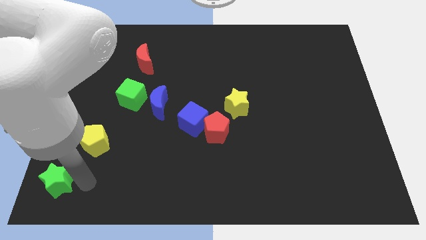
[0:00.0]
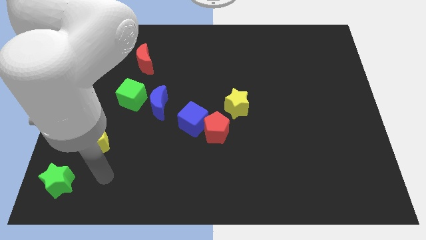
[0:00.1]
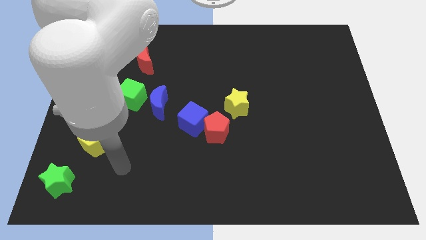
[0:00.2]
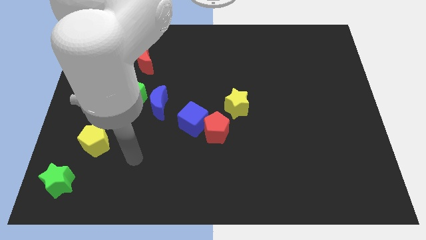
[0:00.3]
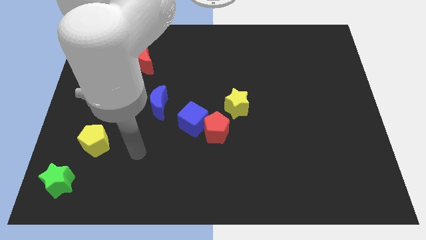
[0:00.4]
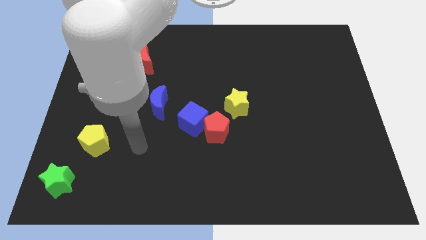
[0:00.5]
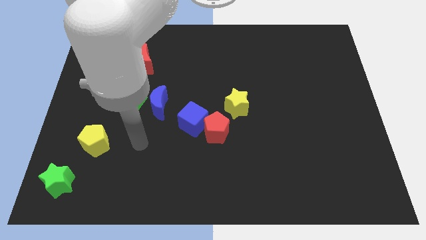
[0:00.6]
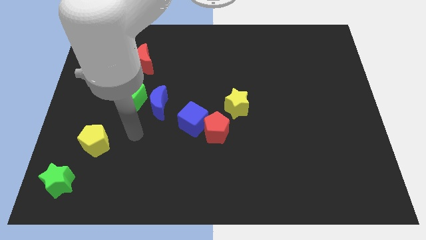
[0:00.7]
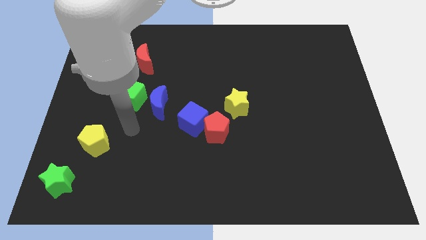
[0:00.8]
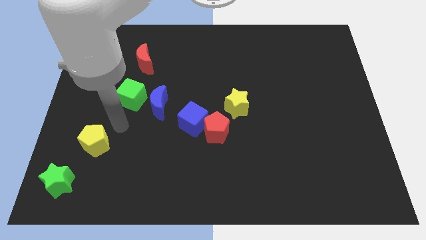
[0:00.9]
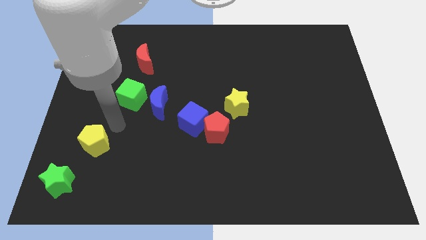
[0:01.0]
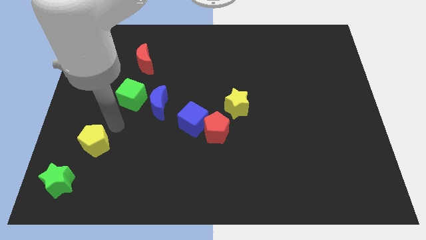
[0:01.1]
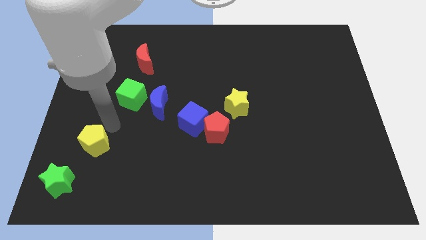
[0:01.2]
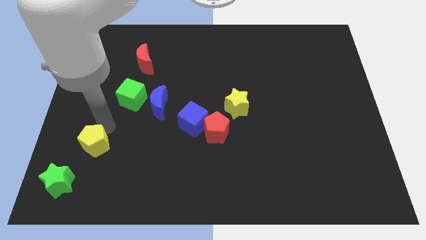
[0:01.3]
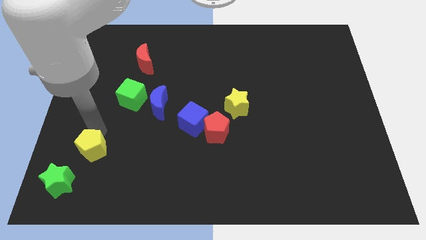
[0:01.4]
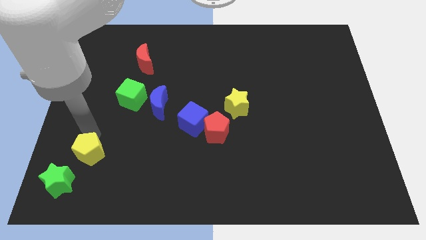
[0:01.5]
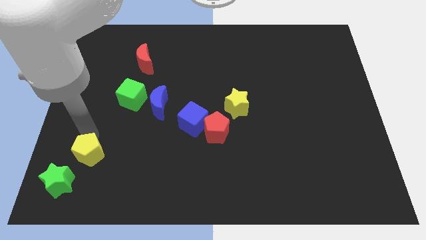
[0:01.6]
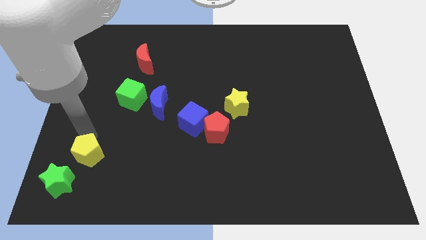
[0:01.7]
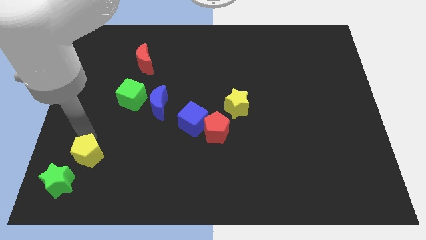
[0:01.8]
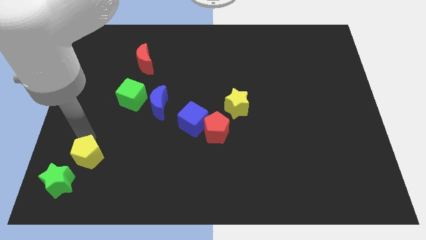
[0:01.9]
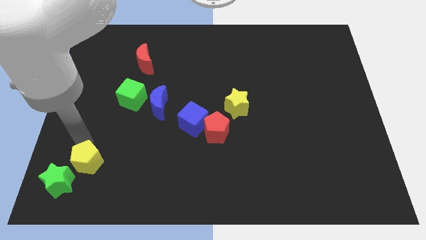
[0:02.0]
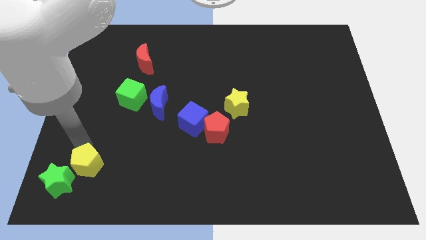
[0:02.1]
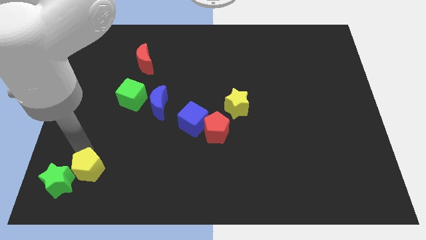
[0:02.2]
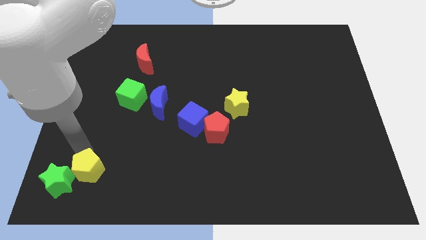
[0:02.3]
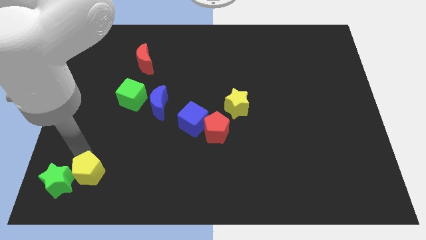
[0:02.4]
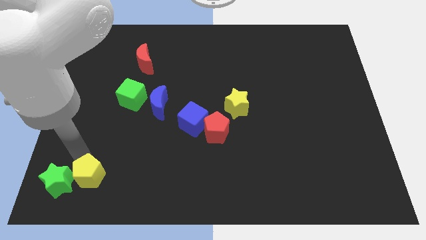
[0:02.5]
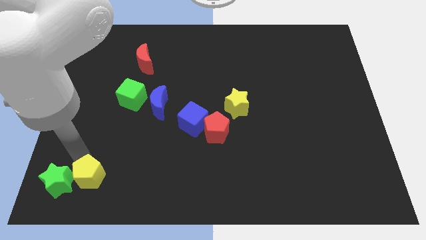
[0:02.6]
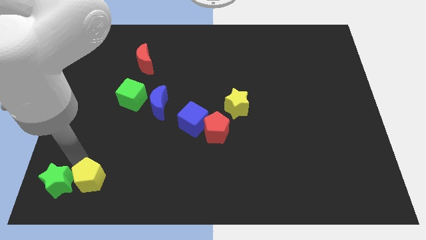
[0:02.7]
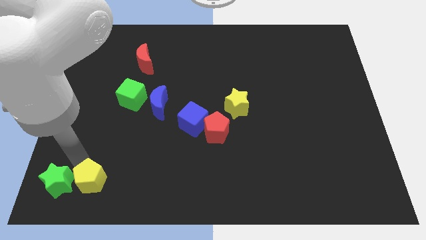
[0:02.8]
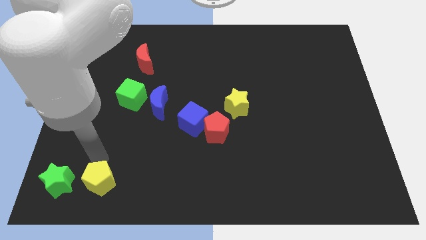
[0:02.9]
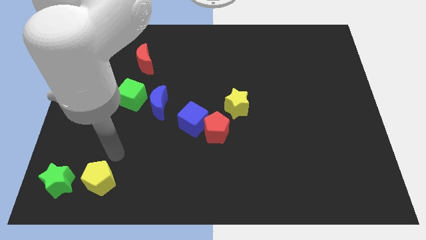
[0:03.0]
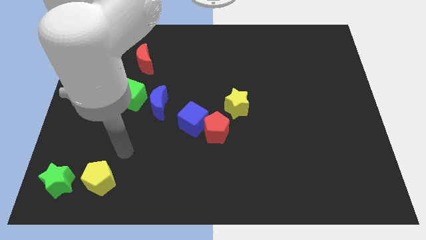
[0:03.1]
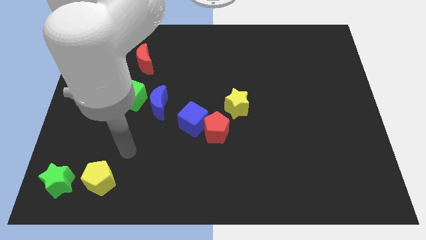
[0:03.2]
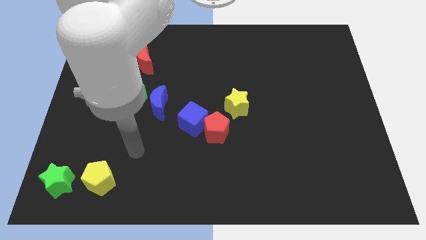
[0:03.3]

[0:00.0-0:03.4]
push the yellow pentagon to the right of the green star

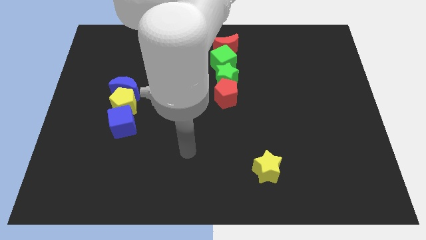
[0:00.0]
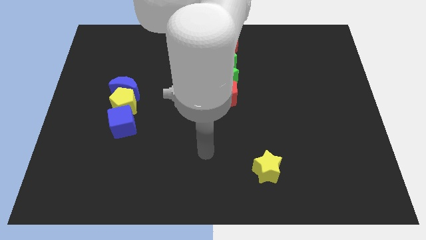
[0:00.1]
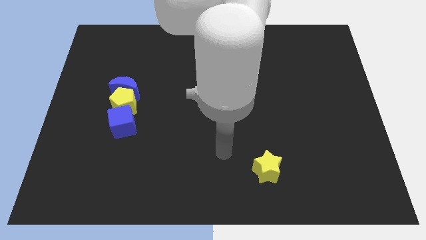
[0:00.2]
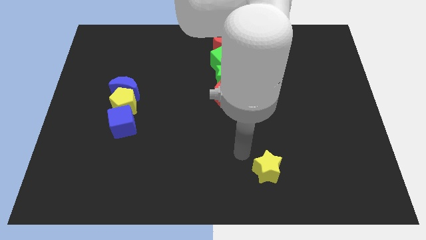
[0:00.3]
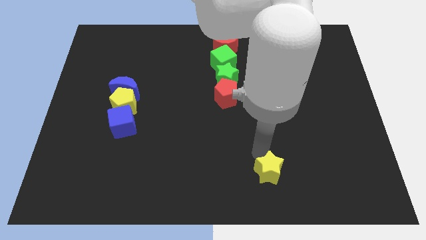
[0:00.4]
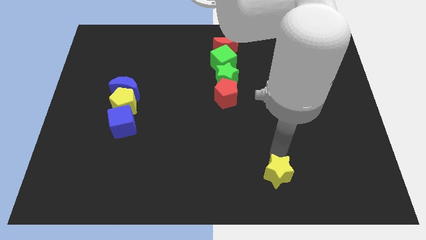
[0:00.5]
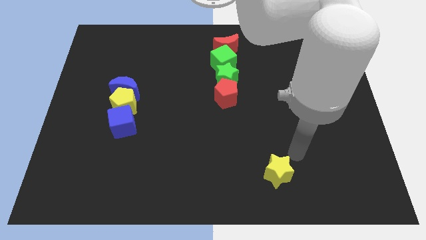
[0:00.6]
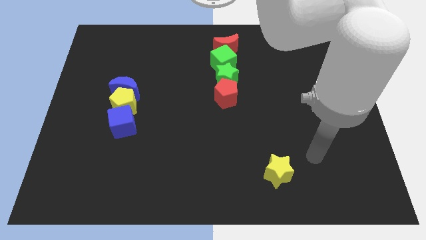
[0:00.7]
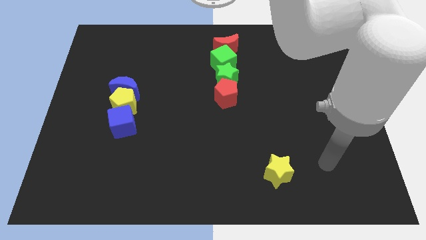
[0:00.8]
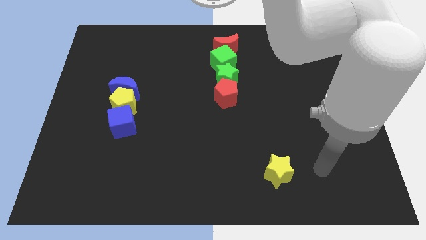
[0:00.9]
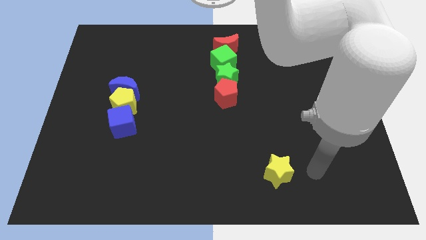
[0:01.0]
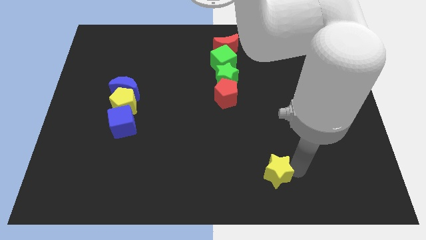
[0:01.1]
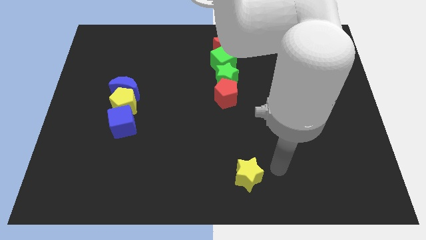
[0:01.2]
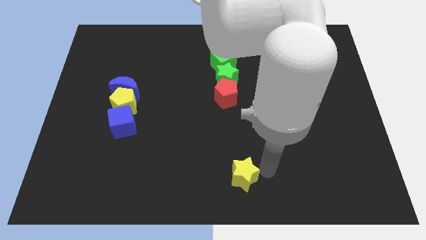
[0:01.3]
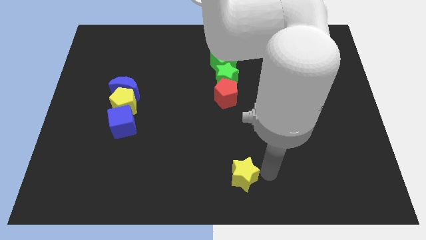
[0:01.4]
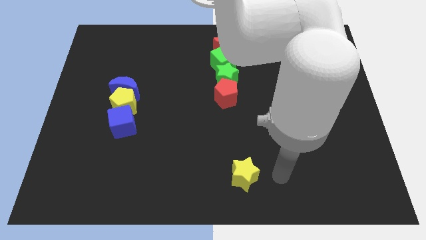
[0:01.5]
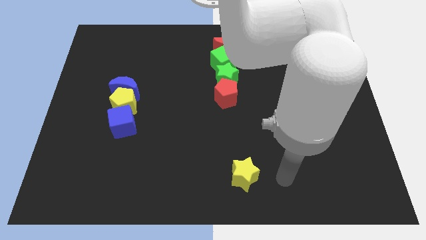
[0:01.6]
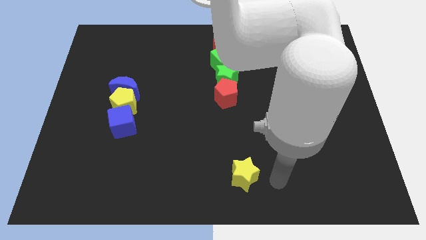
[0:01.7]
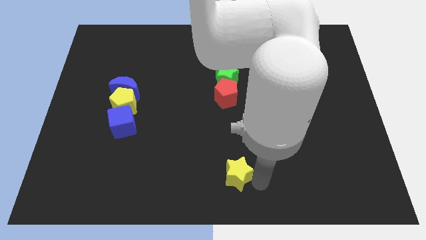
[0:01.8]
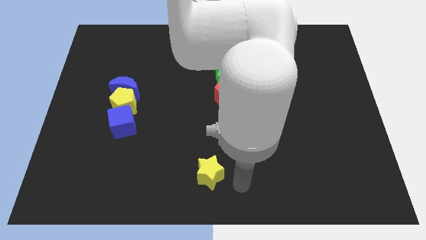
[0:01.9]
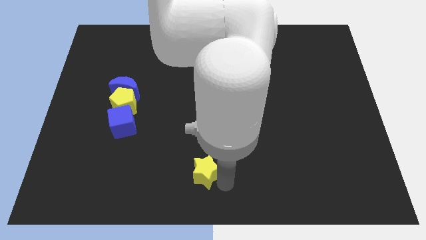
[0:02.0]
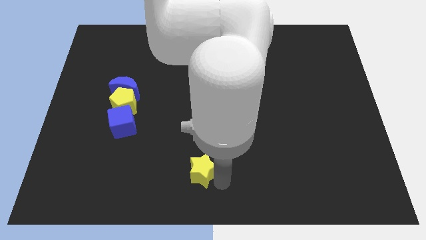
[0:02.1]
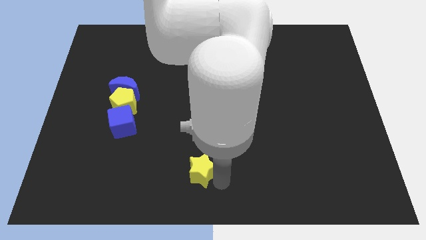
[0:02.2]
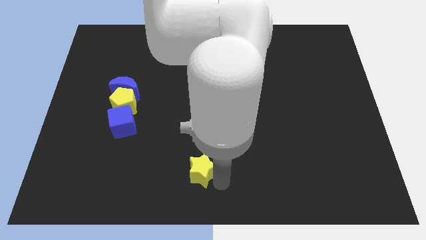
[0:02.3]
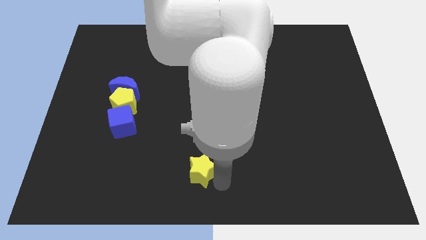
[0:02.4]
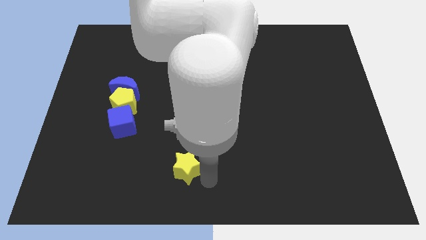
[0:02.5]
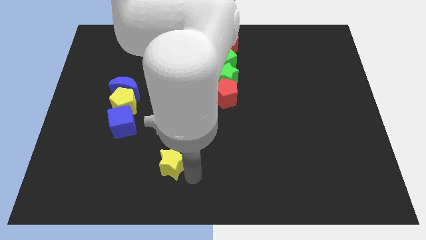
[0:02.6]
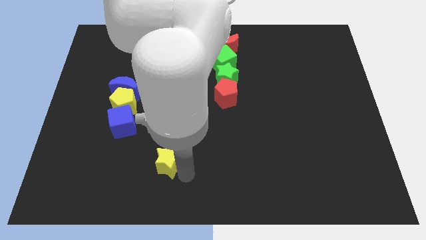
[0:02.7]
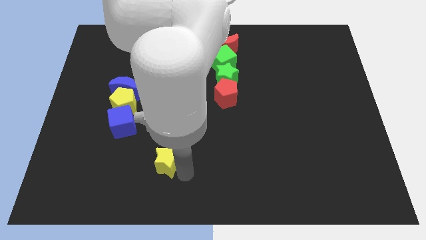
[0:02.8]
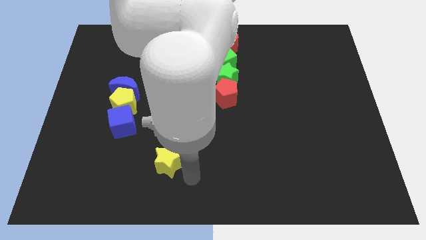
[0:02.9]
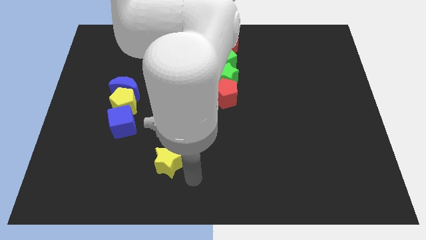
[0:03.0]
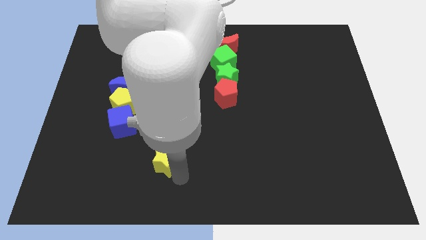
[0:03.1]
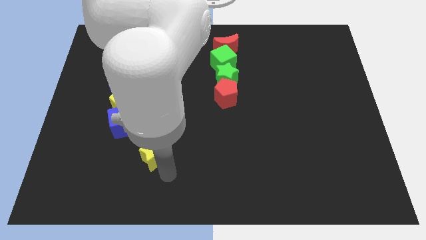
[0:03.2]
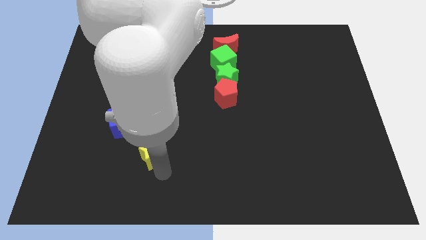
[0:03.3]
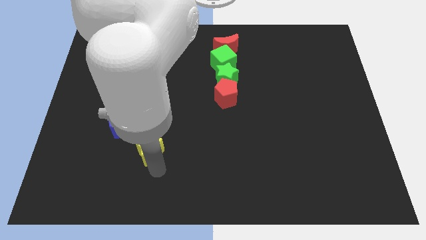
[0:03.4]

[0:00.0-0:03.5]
place the yellow star towards the blue cube

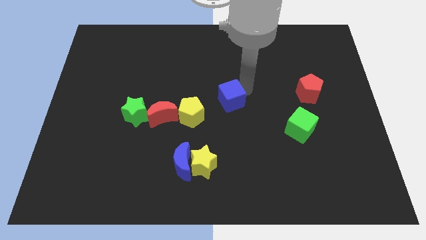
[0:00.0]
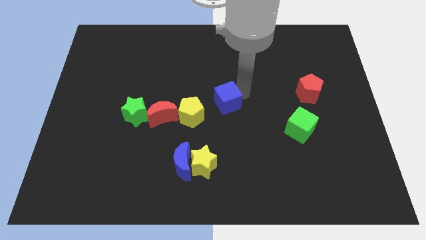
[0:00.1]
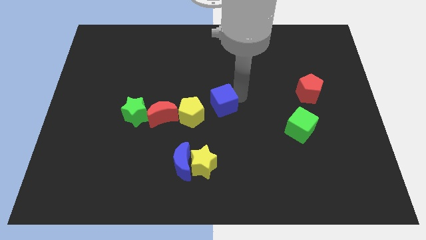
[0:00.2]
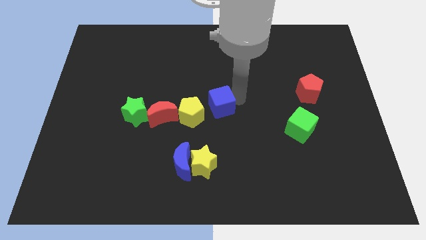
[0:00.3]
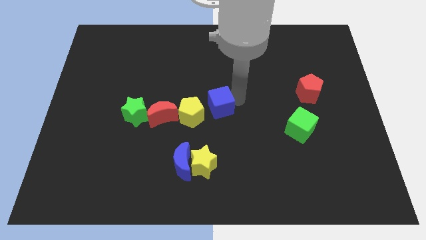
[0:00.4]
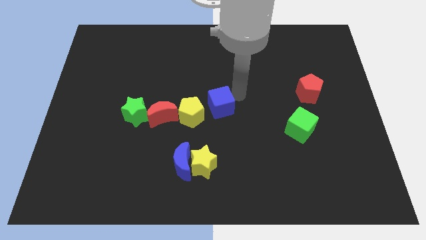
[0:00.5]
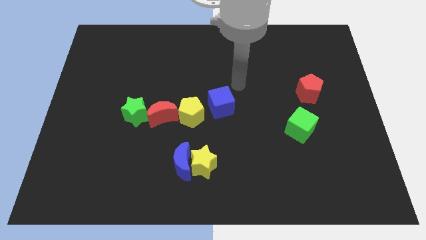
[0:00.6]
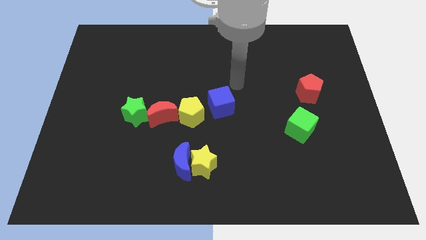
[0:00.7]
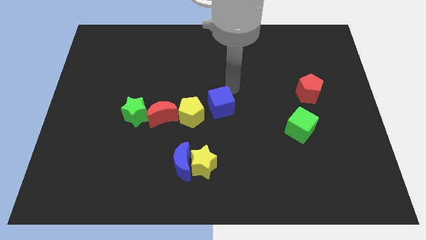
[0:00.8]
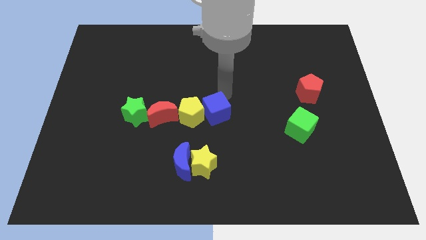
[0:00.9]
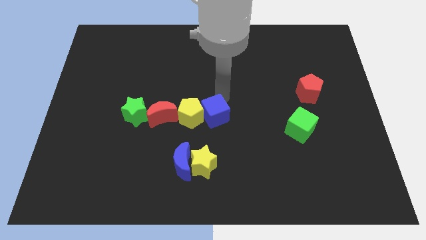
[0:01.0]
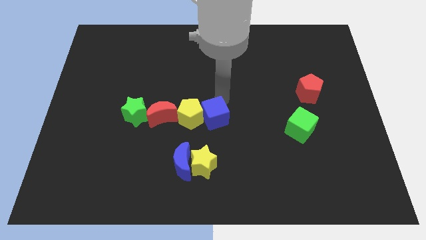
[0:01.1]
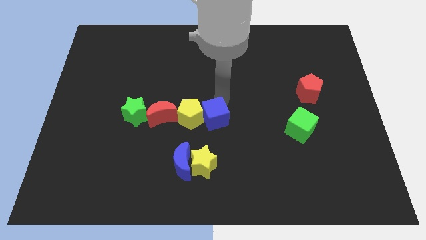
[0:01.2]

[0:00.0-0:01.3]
push the blue cube to the right of the yellow pentagon

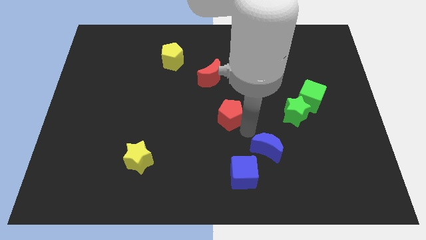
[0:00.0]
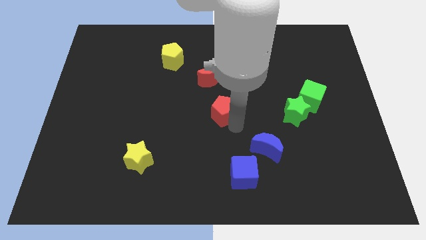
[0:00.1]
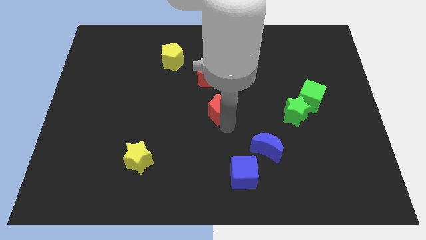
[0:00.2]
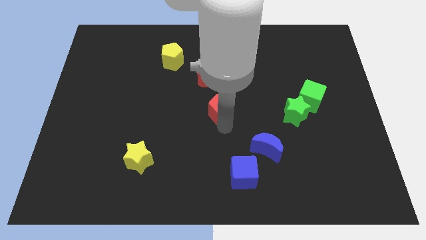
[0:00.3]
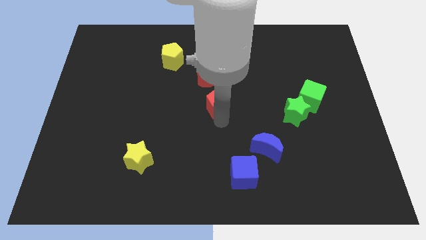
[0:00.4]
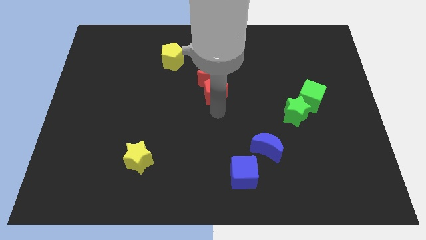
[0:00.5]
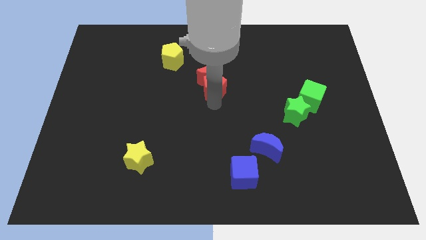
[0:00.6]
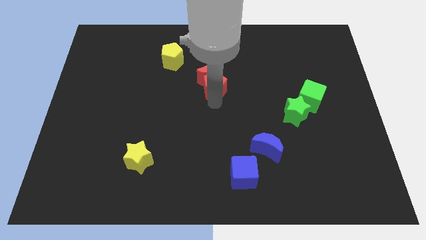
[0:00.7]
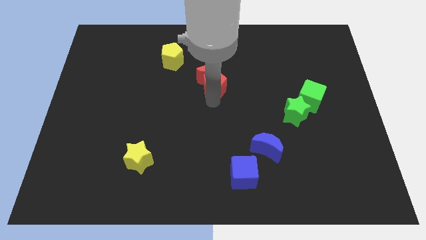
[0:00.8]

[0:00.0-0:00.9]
push red pentagon in to red moon

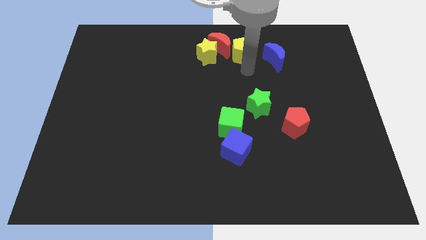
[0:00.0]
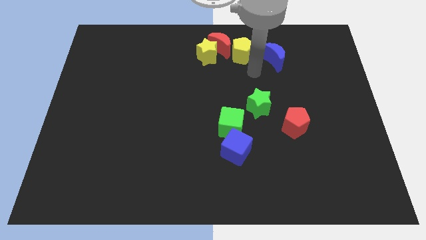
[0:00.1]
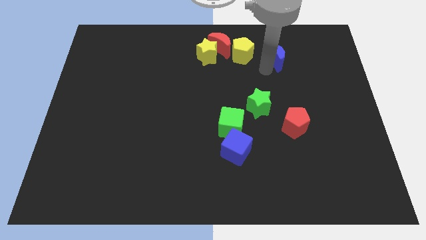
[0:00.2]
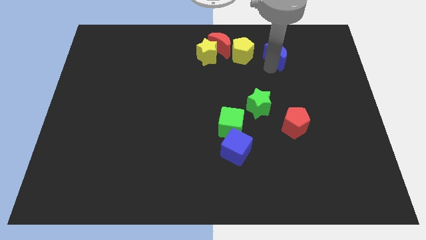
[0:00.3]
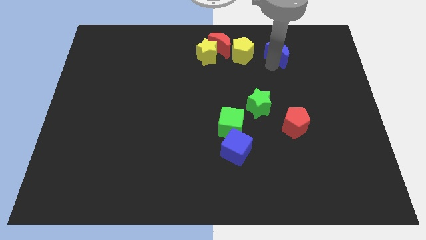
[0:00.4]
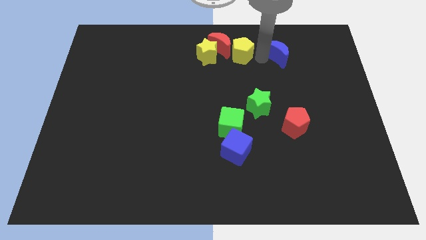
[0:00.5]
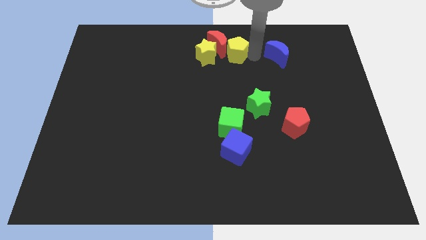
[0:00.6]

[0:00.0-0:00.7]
slightly move the blue crescent to the right
